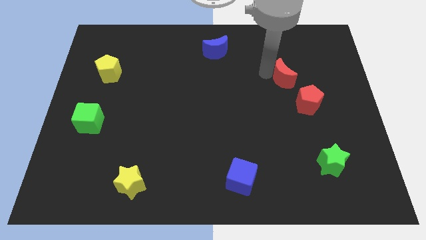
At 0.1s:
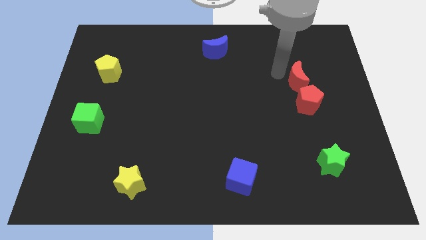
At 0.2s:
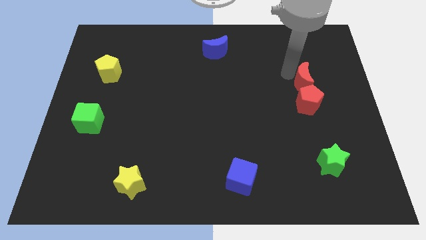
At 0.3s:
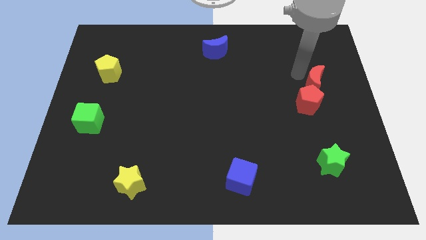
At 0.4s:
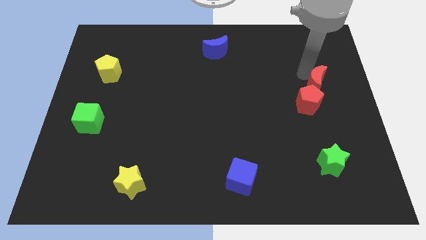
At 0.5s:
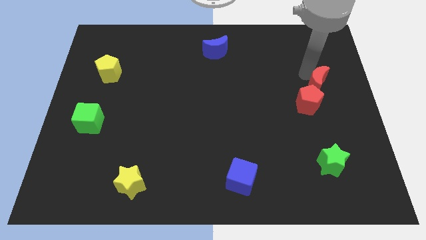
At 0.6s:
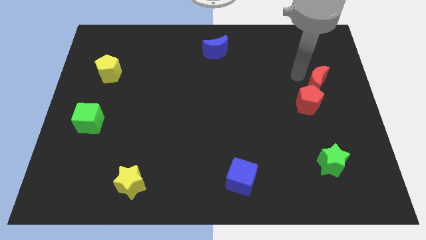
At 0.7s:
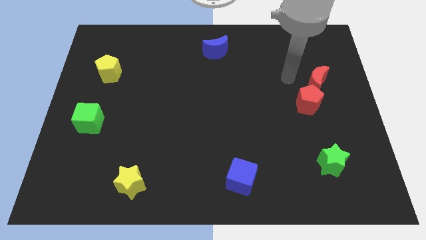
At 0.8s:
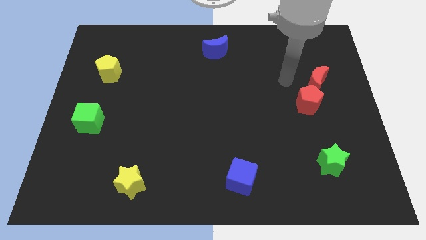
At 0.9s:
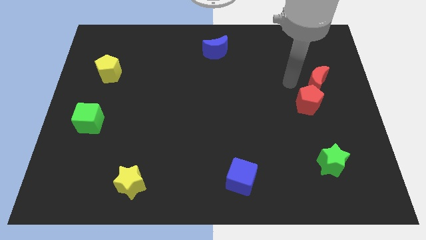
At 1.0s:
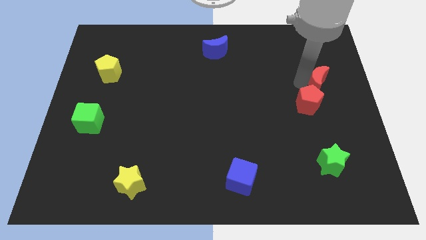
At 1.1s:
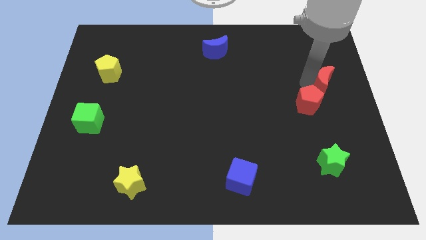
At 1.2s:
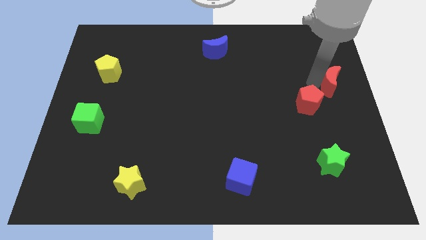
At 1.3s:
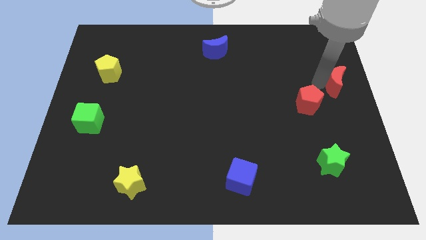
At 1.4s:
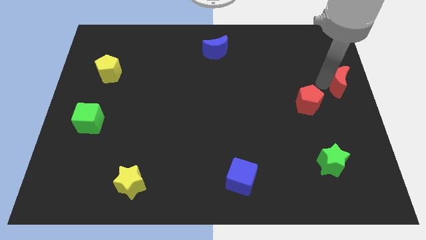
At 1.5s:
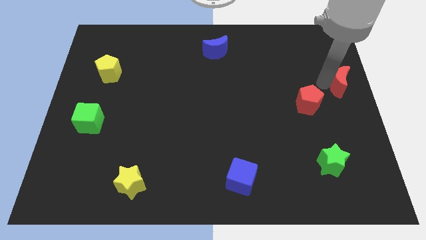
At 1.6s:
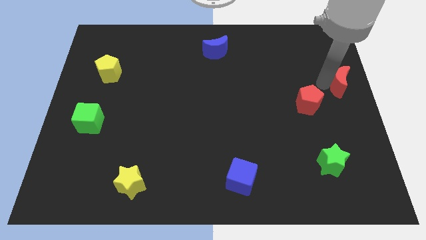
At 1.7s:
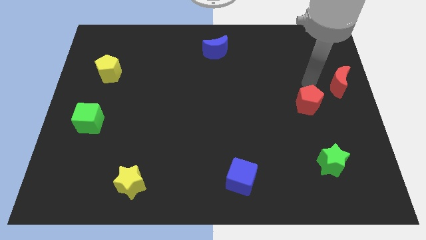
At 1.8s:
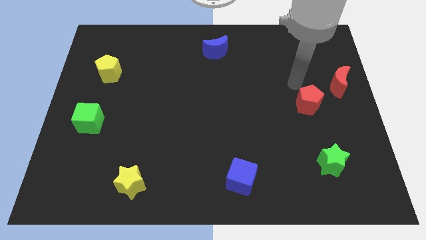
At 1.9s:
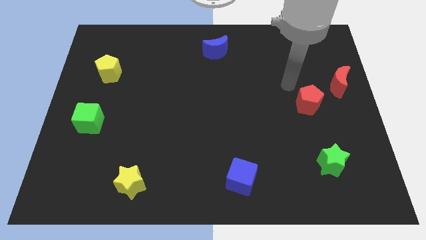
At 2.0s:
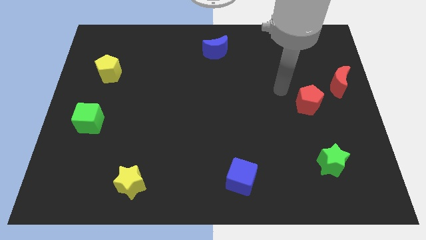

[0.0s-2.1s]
move the red crescent diagonally to the top right of the red pentagon

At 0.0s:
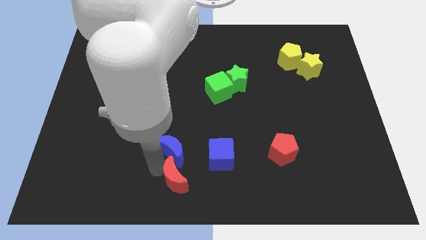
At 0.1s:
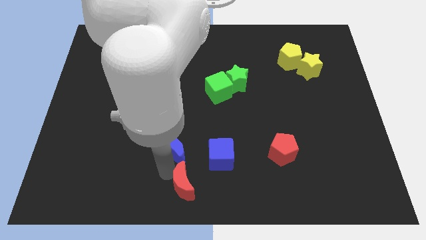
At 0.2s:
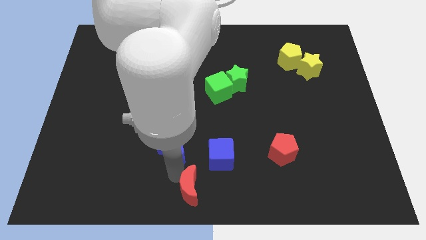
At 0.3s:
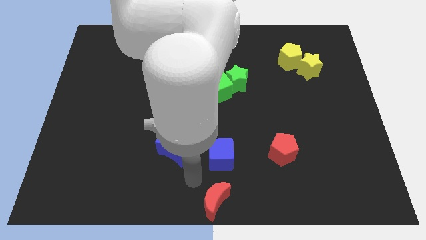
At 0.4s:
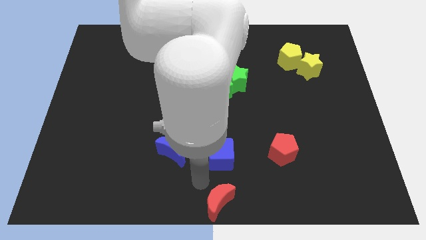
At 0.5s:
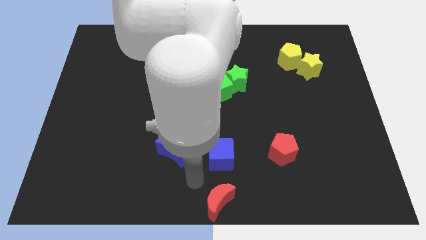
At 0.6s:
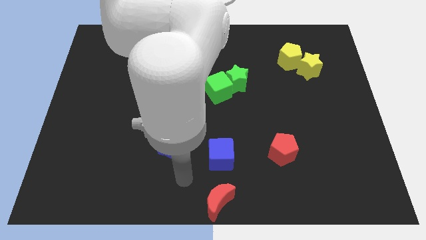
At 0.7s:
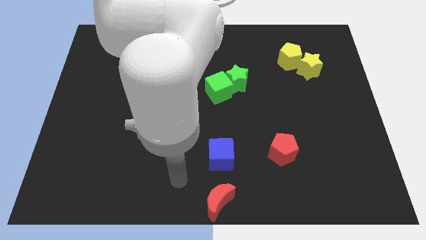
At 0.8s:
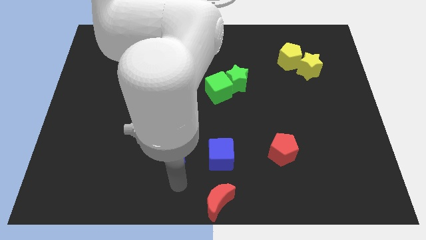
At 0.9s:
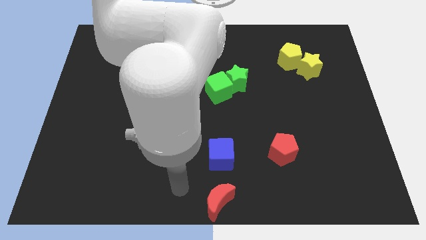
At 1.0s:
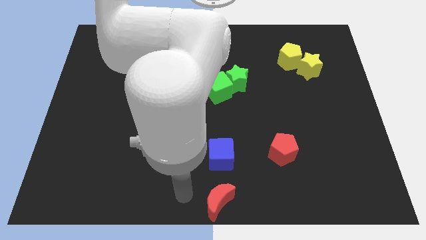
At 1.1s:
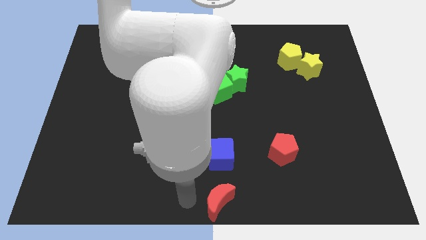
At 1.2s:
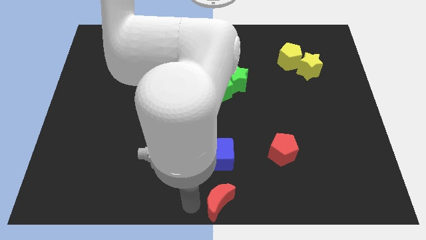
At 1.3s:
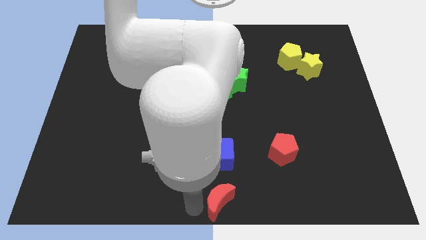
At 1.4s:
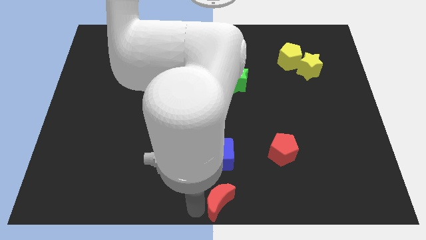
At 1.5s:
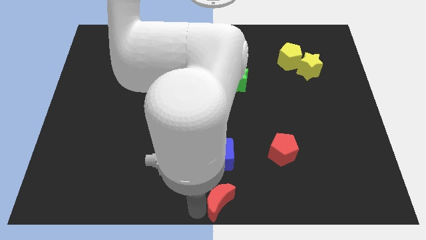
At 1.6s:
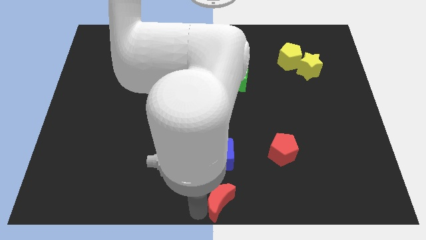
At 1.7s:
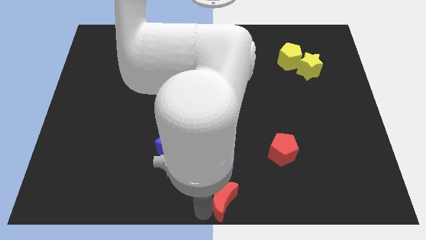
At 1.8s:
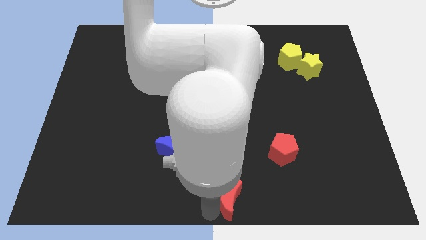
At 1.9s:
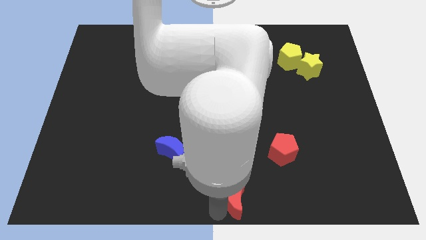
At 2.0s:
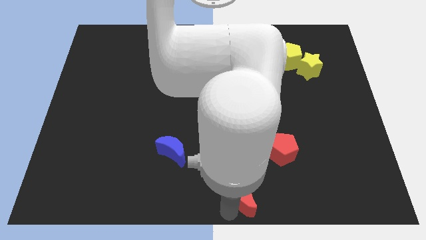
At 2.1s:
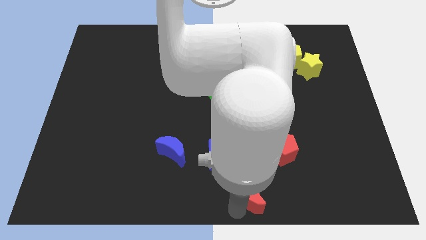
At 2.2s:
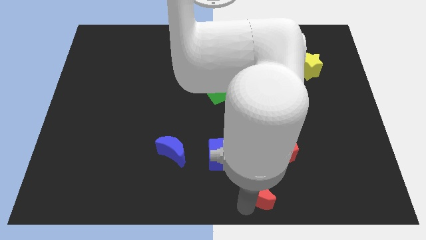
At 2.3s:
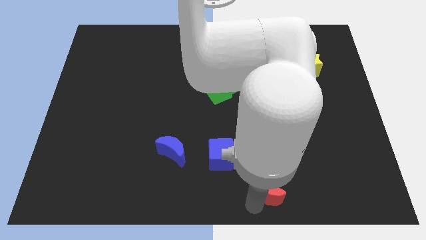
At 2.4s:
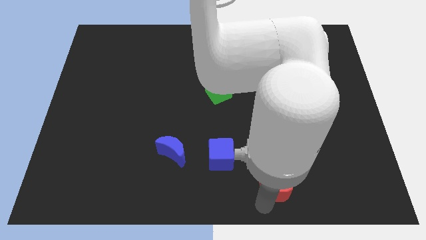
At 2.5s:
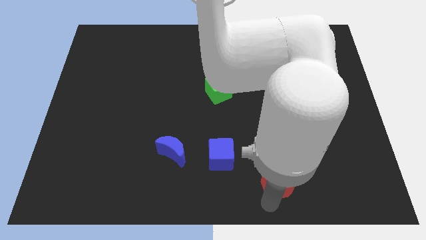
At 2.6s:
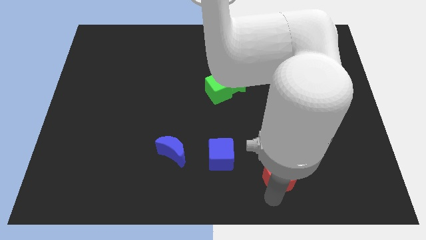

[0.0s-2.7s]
place the red moon below the red pentagon

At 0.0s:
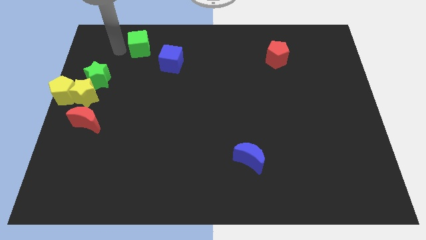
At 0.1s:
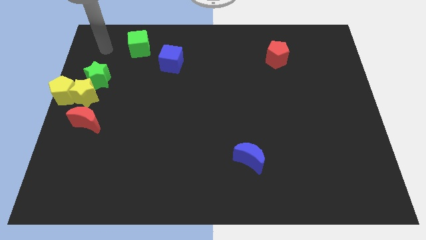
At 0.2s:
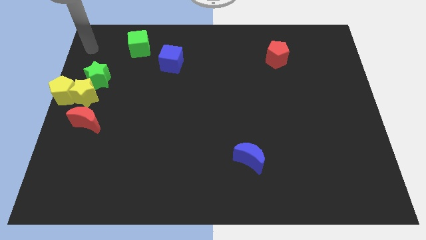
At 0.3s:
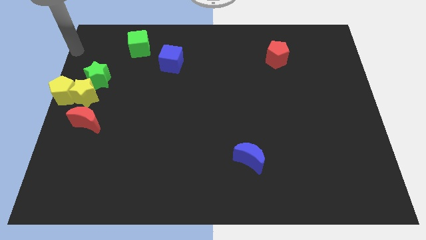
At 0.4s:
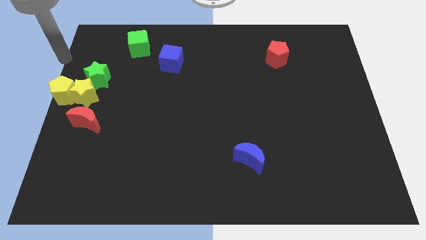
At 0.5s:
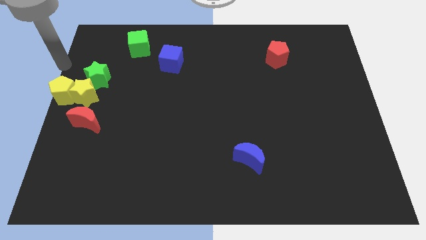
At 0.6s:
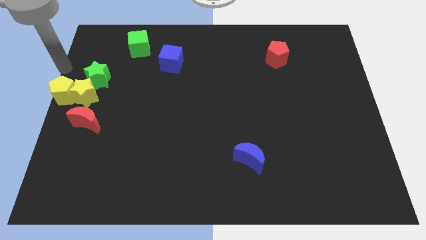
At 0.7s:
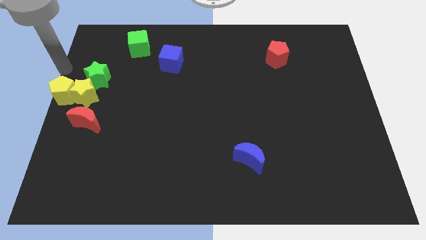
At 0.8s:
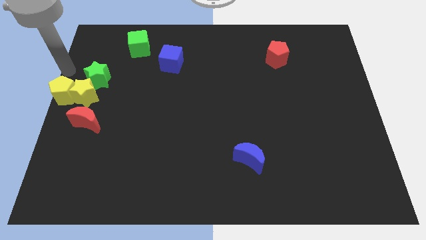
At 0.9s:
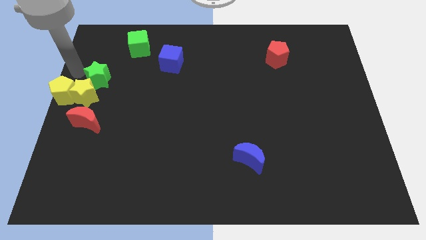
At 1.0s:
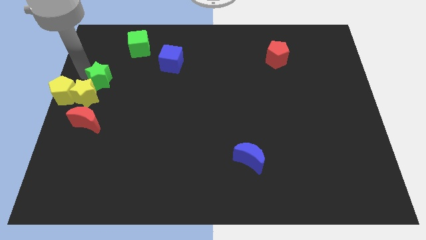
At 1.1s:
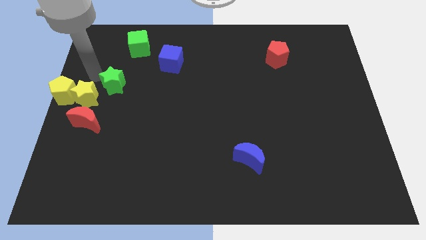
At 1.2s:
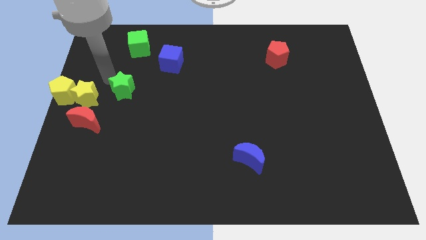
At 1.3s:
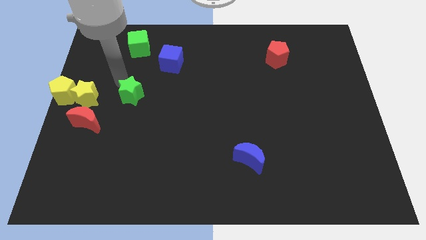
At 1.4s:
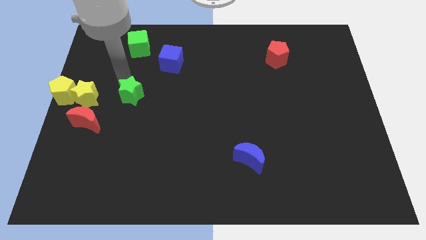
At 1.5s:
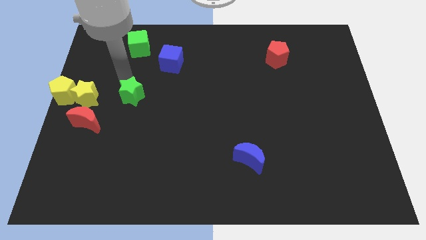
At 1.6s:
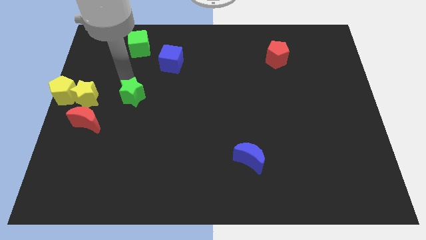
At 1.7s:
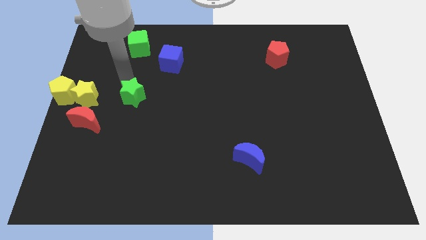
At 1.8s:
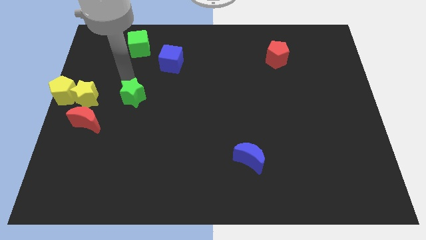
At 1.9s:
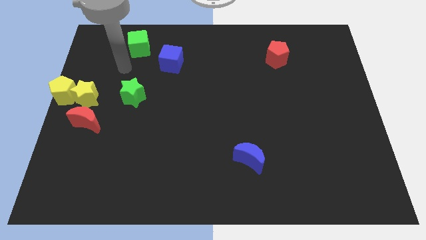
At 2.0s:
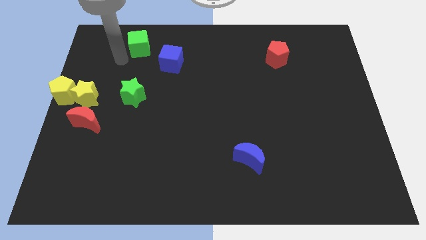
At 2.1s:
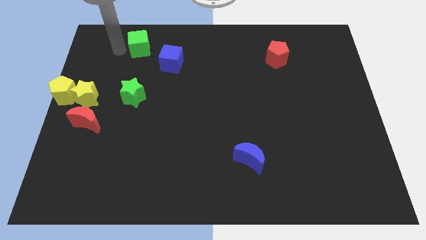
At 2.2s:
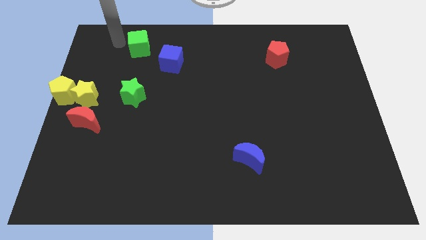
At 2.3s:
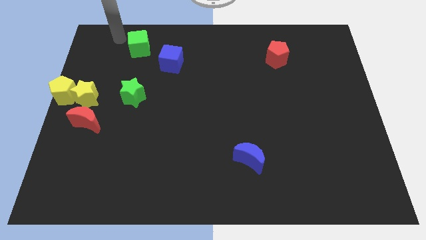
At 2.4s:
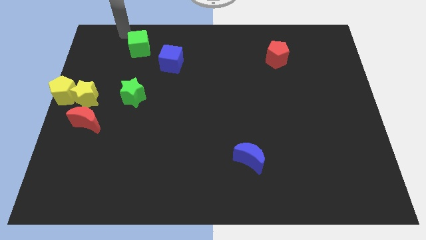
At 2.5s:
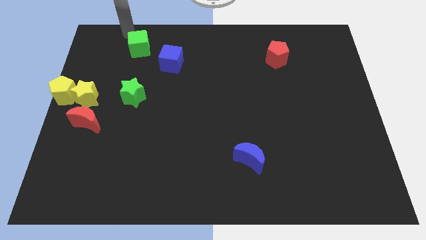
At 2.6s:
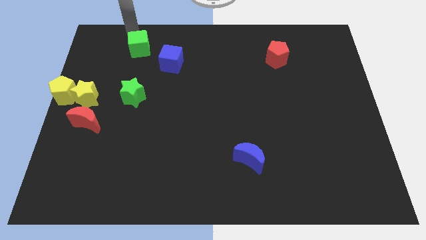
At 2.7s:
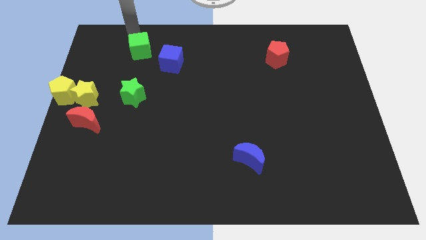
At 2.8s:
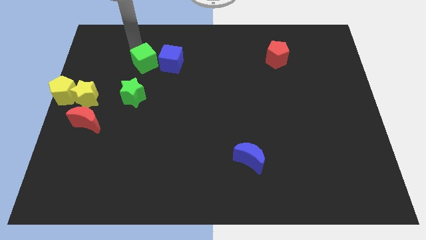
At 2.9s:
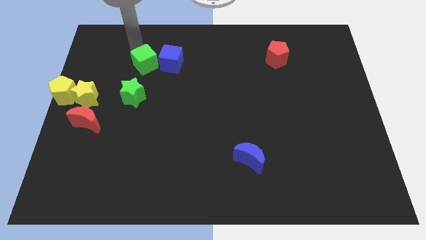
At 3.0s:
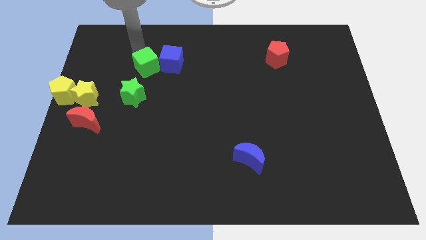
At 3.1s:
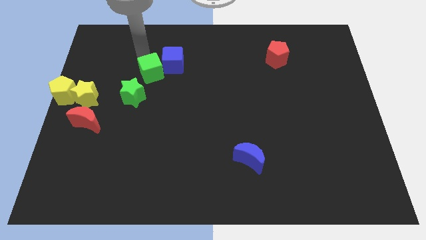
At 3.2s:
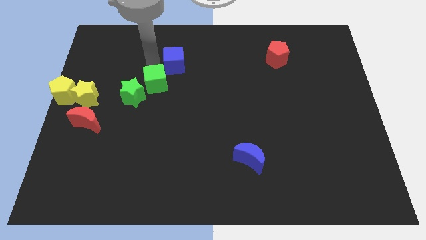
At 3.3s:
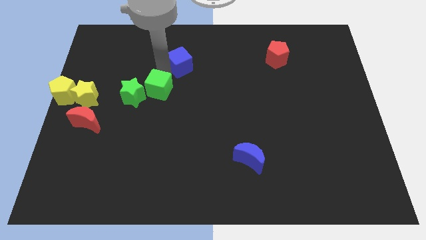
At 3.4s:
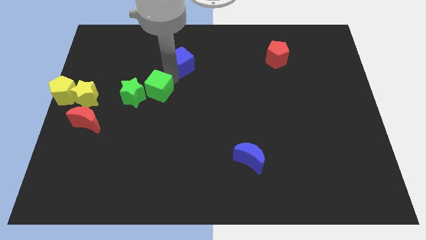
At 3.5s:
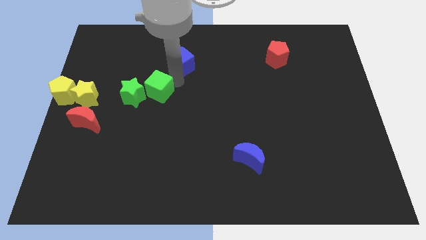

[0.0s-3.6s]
put the green blocks together to the right of yellow blocks

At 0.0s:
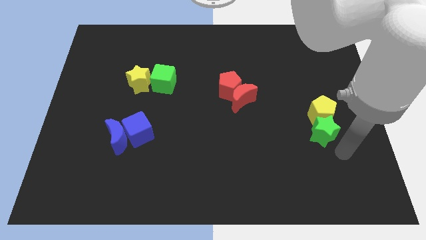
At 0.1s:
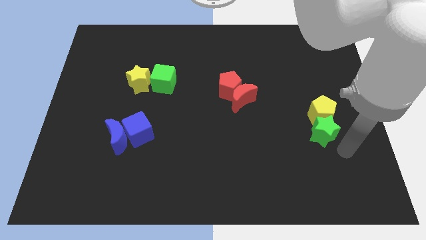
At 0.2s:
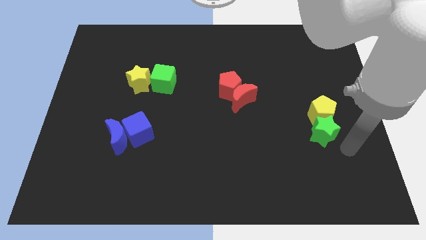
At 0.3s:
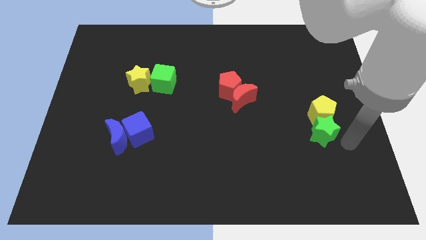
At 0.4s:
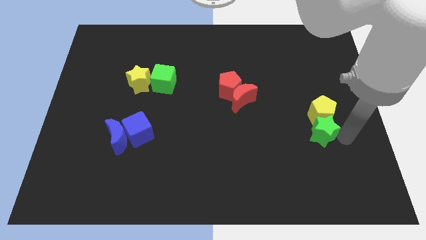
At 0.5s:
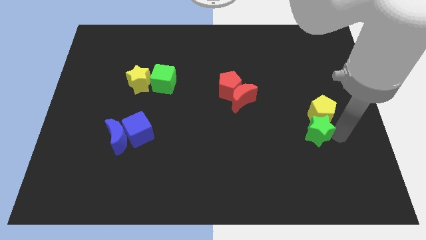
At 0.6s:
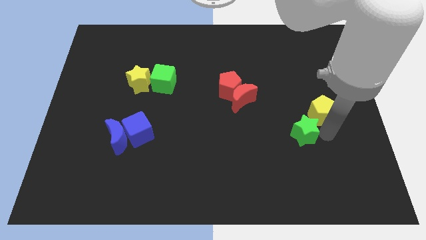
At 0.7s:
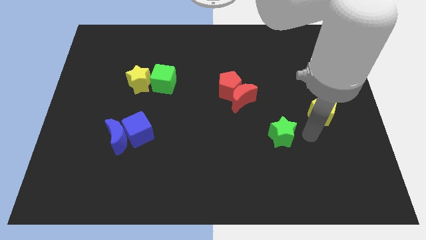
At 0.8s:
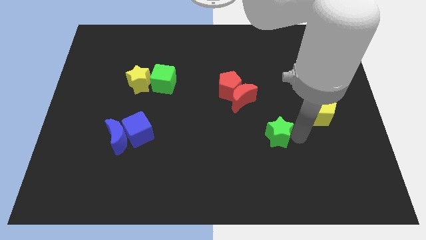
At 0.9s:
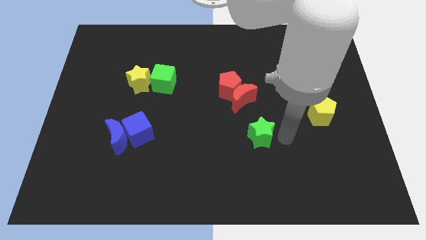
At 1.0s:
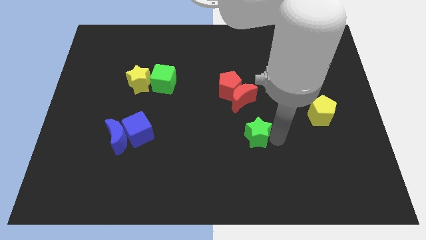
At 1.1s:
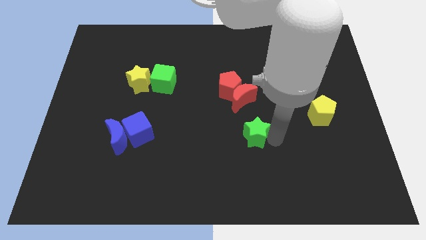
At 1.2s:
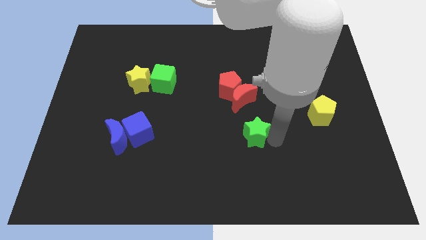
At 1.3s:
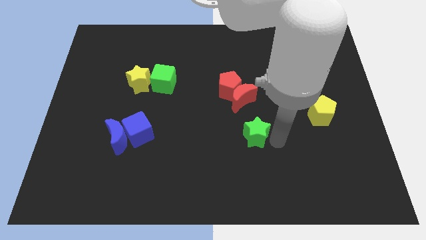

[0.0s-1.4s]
separate the green star from the yellow pentagon
